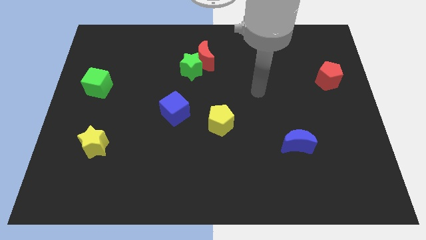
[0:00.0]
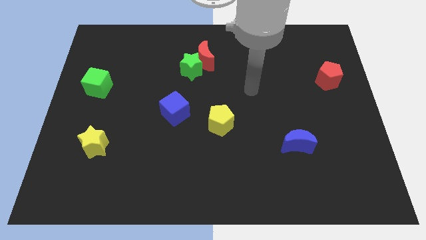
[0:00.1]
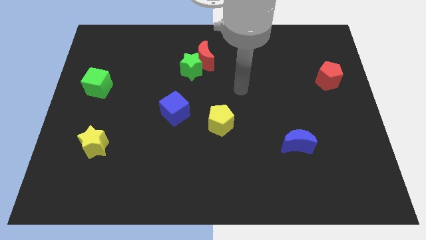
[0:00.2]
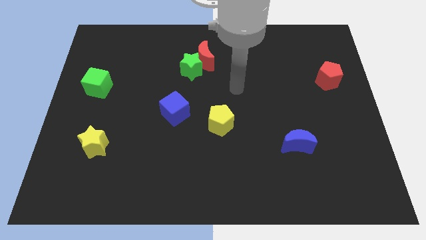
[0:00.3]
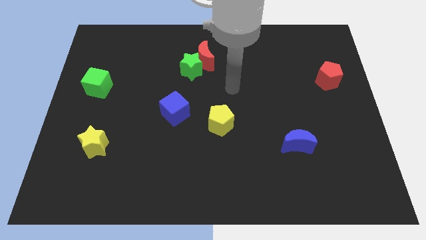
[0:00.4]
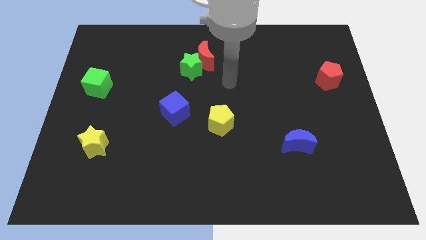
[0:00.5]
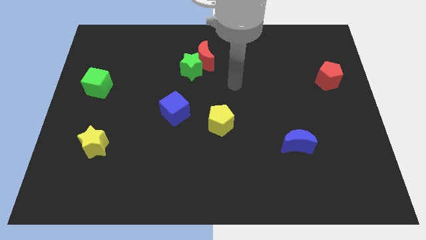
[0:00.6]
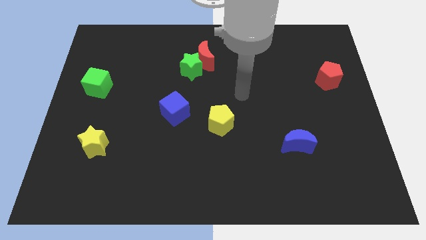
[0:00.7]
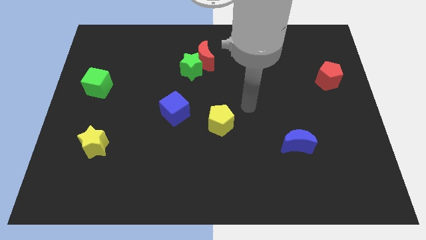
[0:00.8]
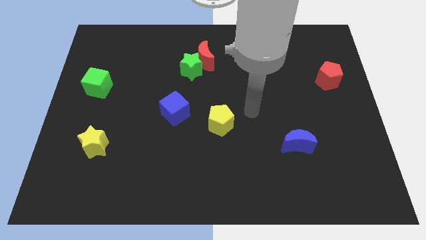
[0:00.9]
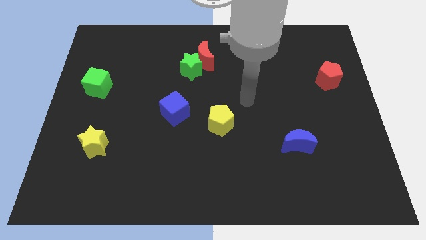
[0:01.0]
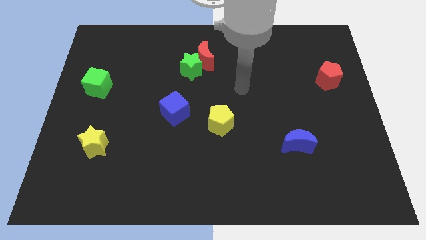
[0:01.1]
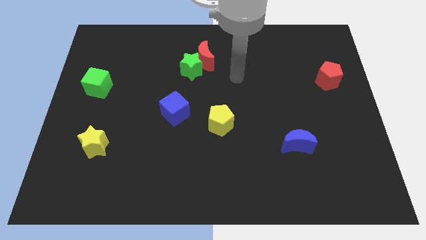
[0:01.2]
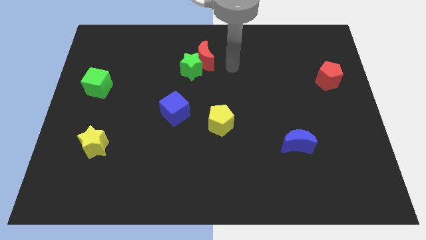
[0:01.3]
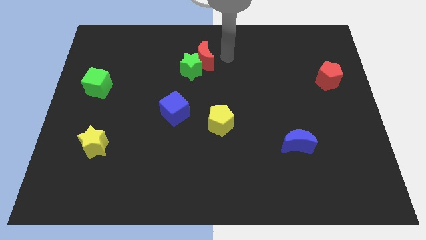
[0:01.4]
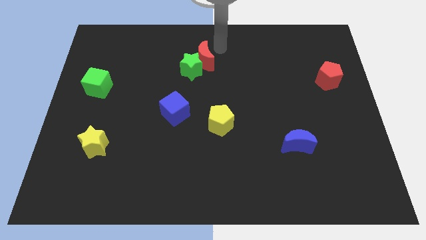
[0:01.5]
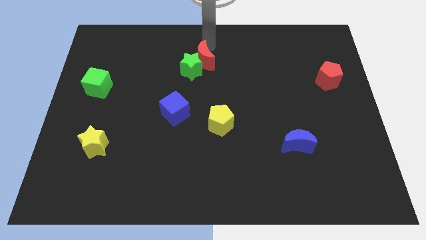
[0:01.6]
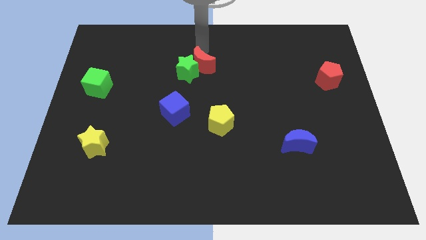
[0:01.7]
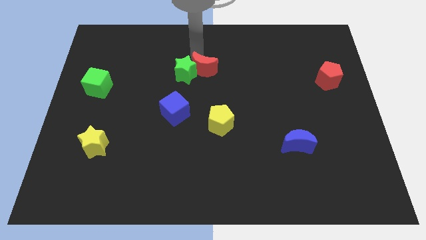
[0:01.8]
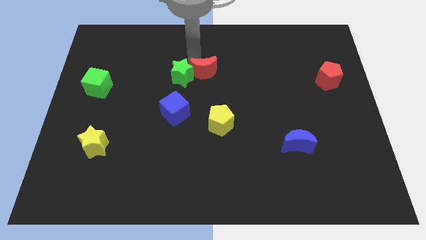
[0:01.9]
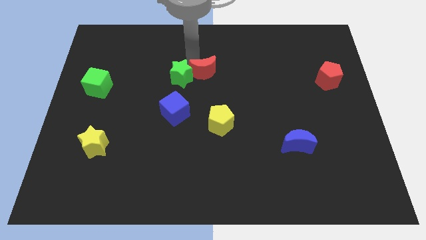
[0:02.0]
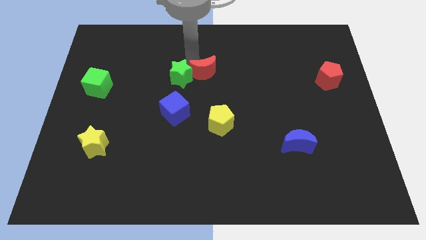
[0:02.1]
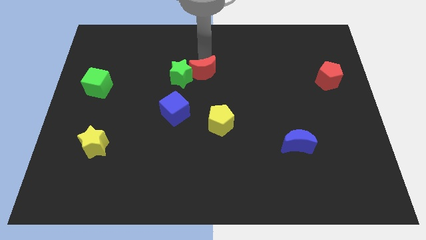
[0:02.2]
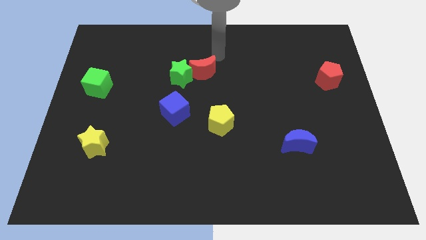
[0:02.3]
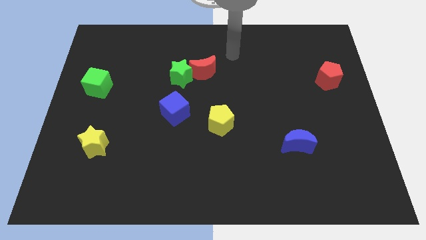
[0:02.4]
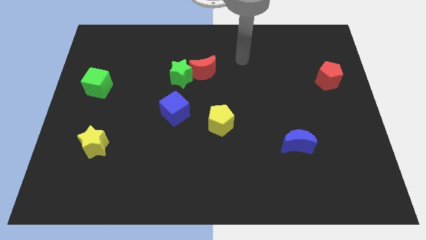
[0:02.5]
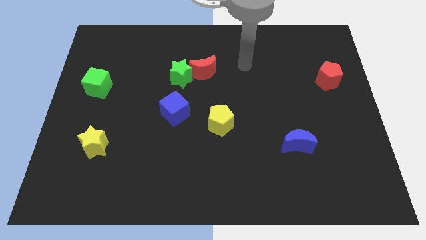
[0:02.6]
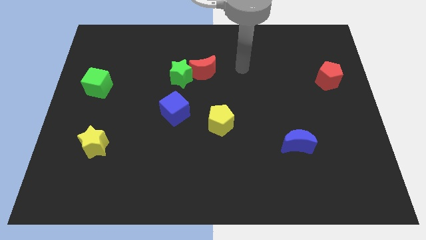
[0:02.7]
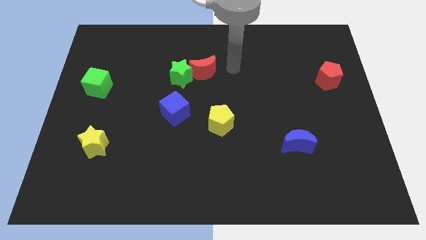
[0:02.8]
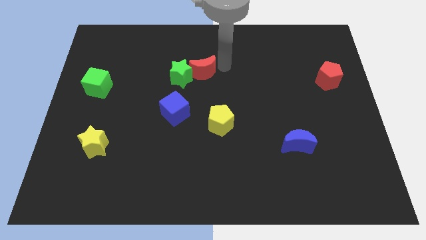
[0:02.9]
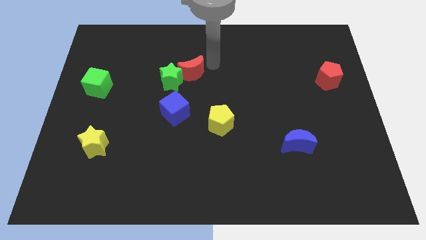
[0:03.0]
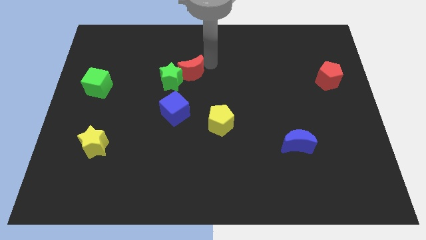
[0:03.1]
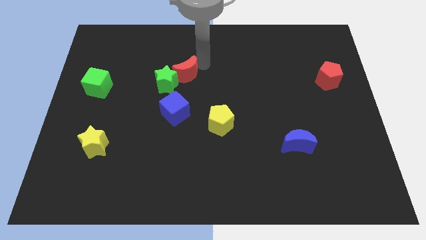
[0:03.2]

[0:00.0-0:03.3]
move the red crescent near the green star

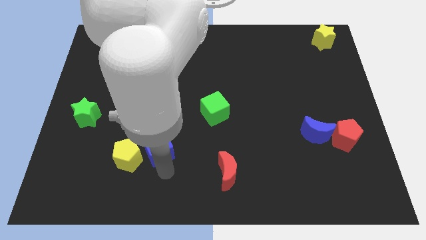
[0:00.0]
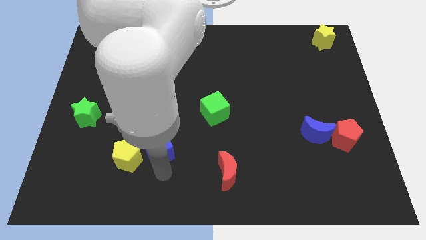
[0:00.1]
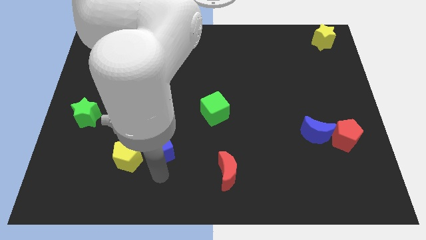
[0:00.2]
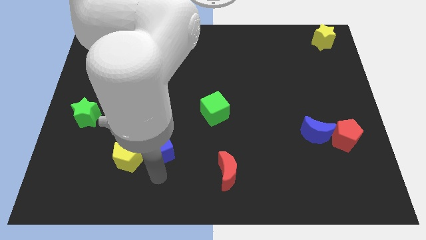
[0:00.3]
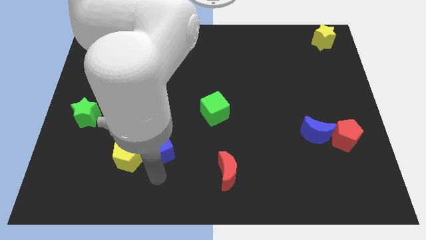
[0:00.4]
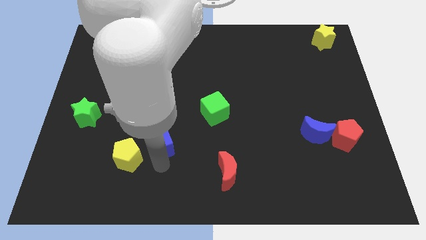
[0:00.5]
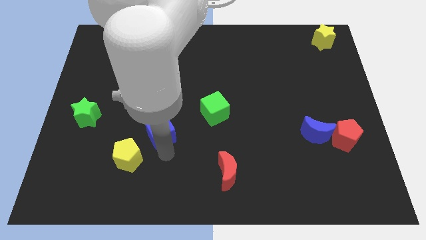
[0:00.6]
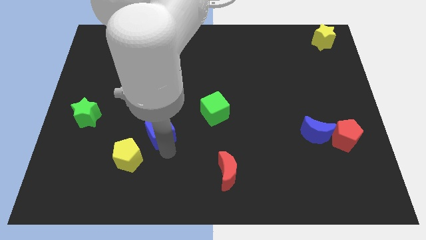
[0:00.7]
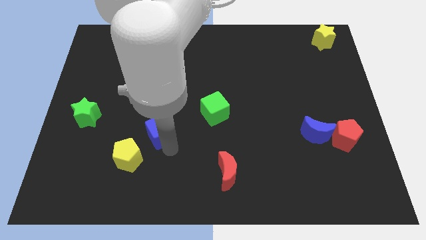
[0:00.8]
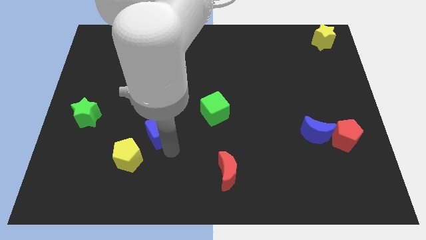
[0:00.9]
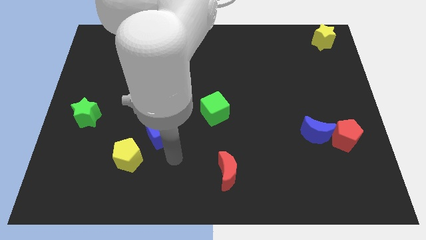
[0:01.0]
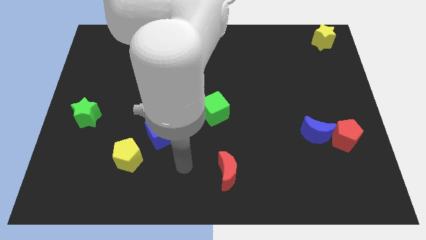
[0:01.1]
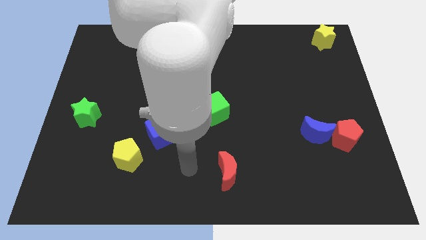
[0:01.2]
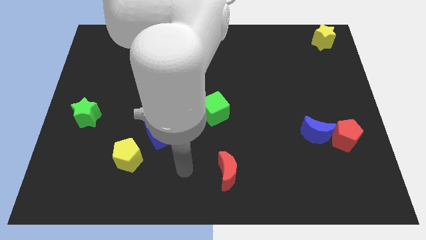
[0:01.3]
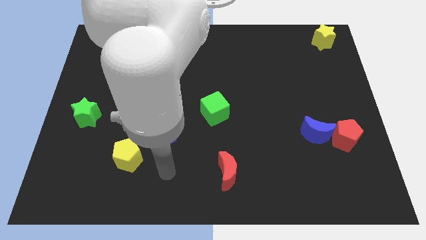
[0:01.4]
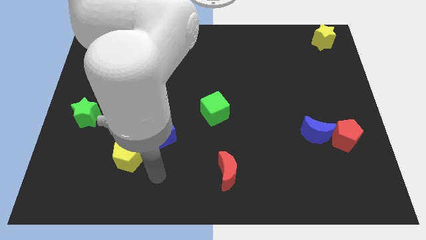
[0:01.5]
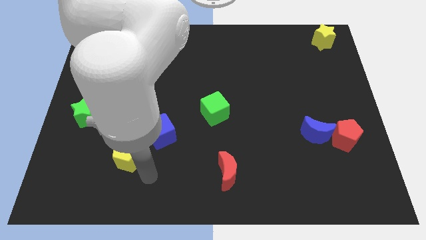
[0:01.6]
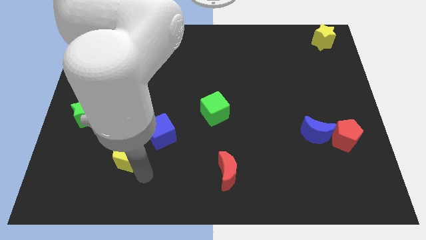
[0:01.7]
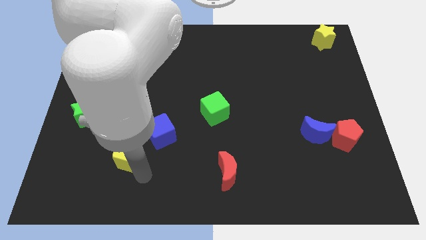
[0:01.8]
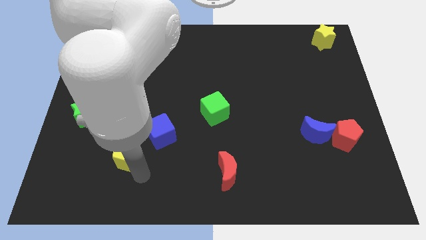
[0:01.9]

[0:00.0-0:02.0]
move the blue cube diagonally top right to the yellow pentagon

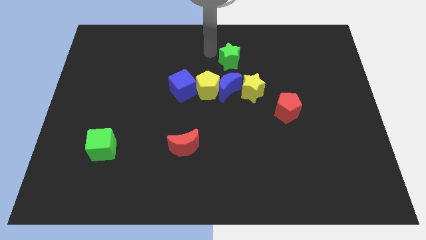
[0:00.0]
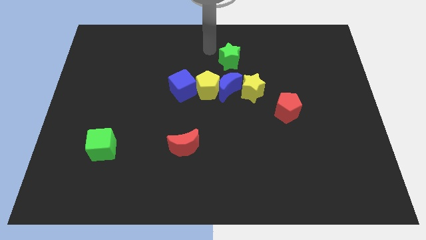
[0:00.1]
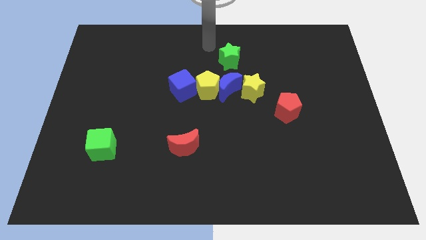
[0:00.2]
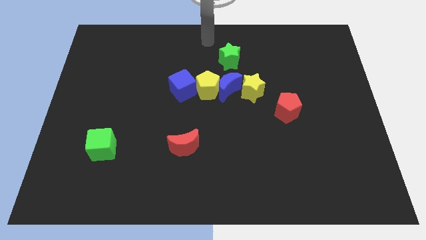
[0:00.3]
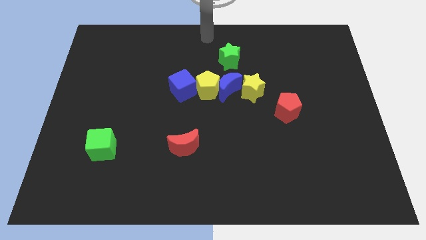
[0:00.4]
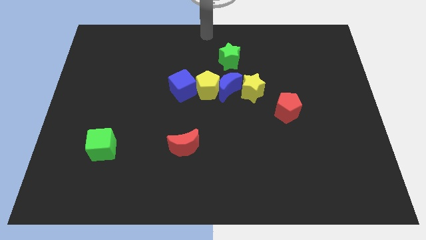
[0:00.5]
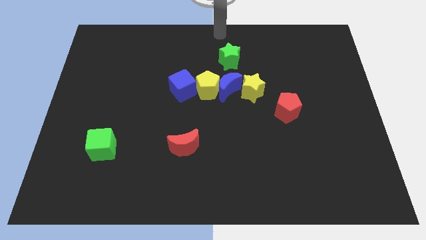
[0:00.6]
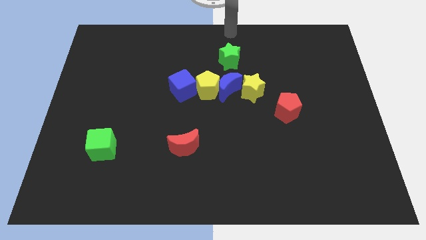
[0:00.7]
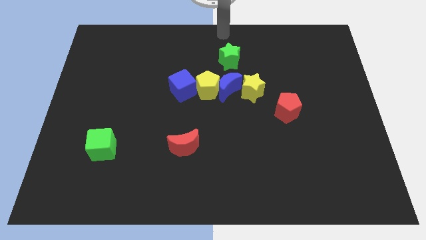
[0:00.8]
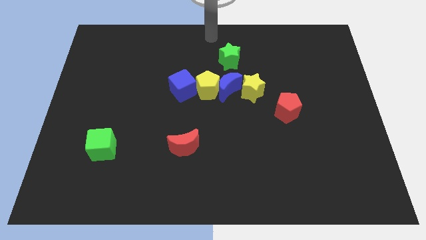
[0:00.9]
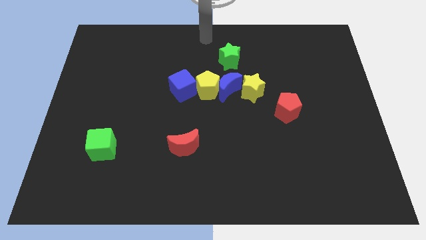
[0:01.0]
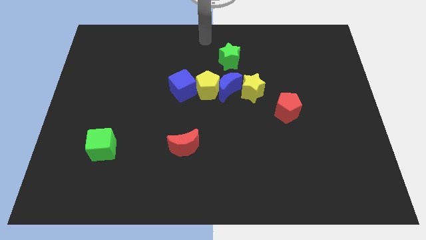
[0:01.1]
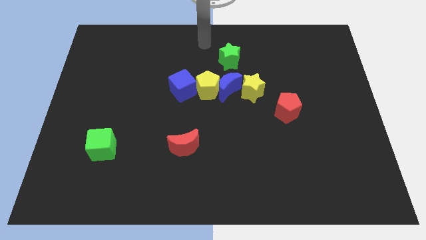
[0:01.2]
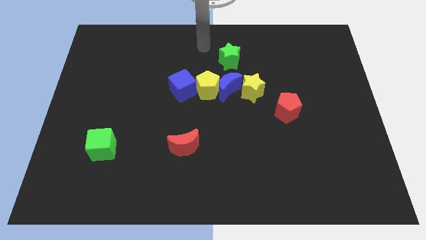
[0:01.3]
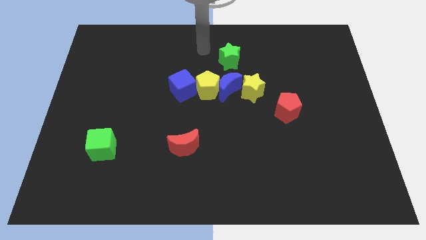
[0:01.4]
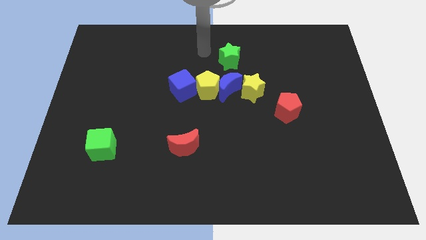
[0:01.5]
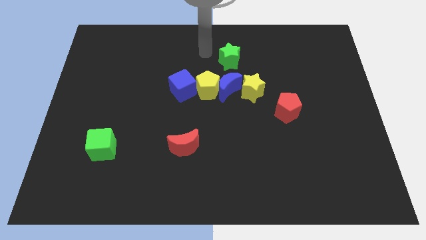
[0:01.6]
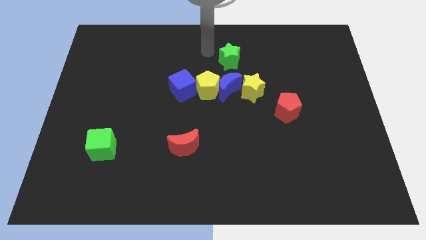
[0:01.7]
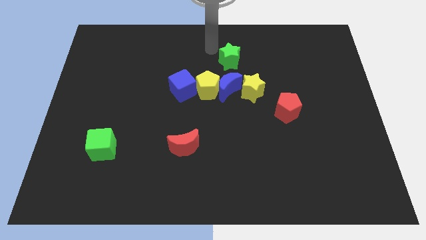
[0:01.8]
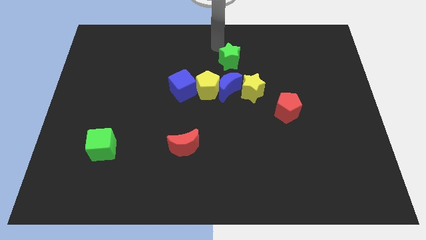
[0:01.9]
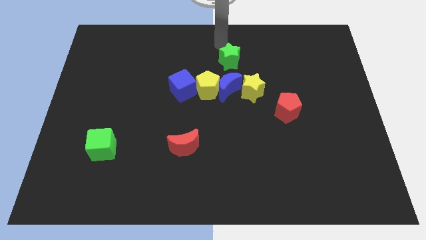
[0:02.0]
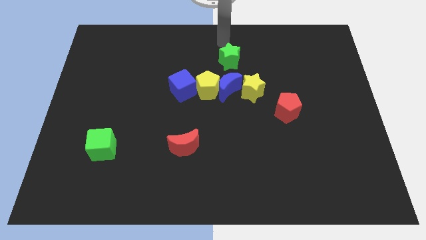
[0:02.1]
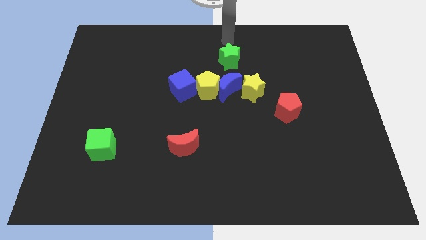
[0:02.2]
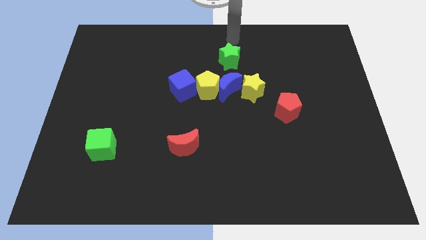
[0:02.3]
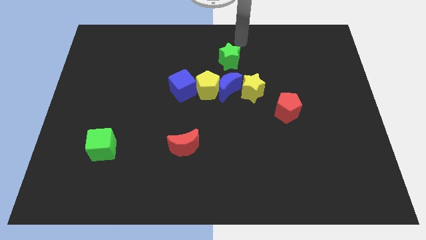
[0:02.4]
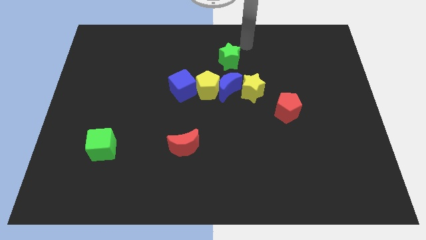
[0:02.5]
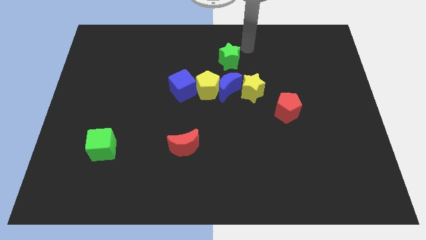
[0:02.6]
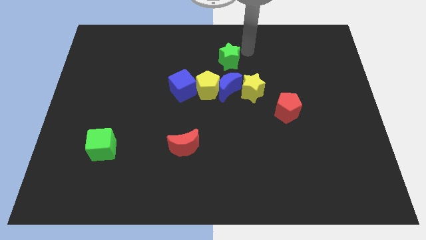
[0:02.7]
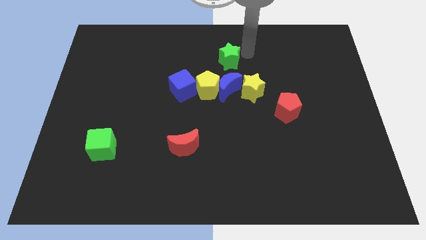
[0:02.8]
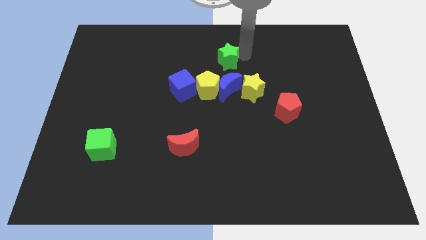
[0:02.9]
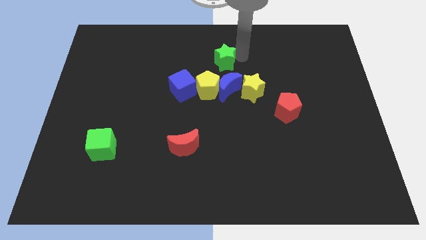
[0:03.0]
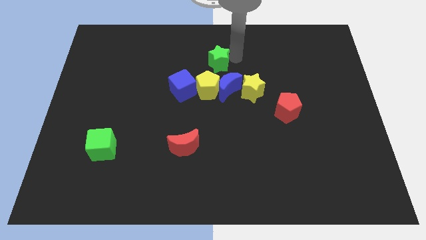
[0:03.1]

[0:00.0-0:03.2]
move the green star slightly left of the board

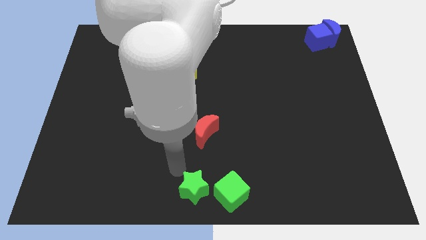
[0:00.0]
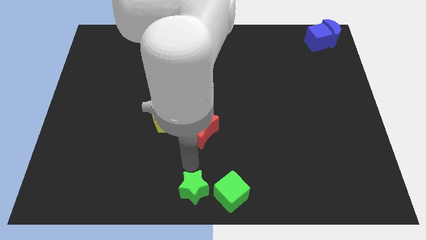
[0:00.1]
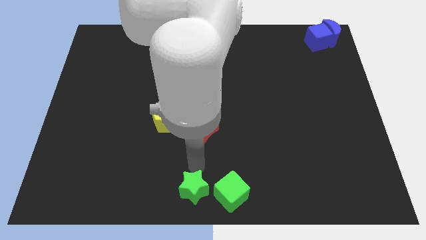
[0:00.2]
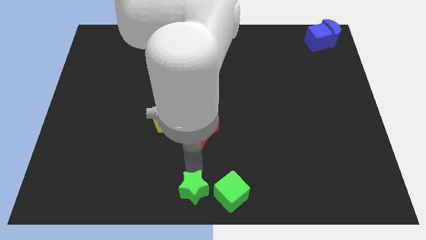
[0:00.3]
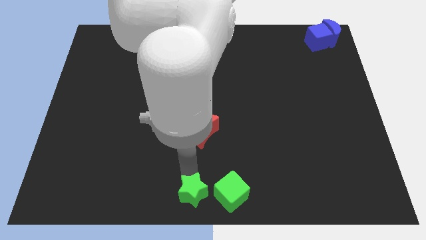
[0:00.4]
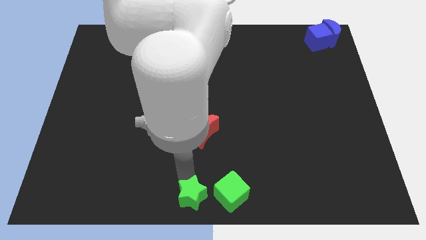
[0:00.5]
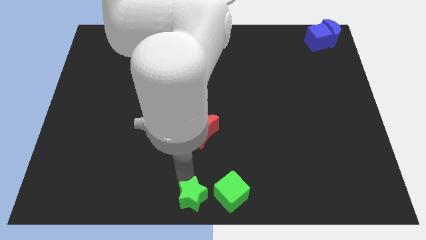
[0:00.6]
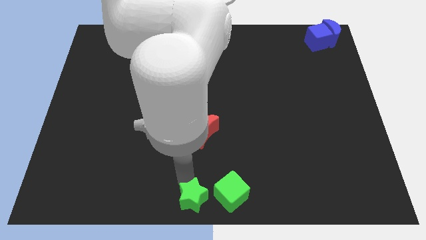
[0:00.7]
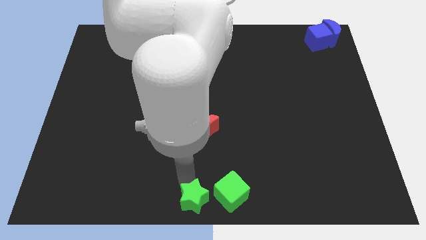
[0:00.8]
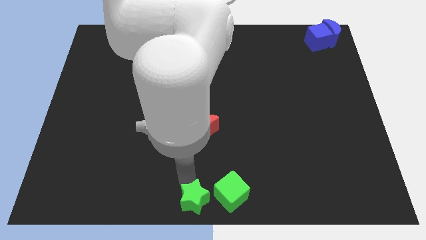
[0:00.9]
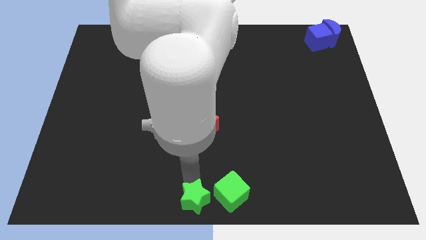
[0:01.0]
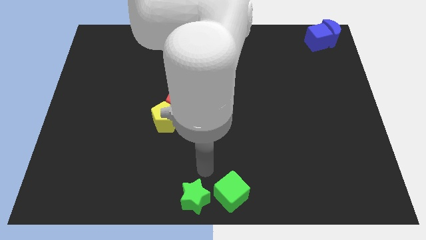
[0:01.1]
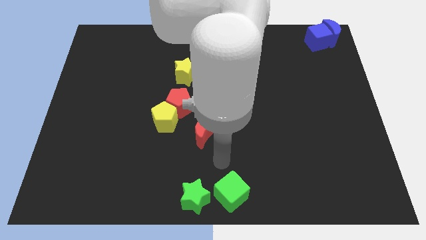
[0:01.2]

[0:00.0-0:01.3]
move green star to the bottom center
